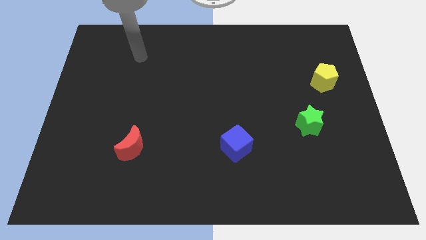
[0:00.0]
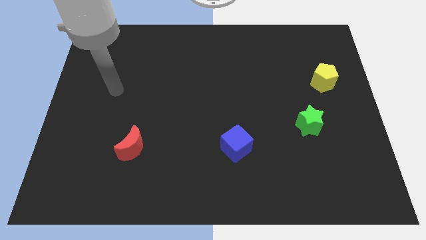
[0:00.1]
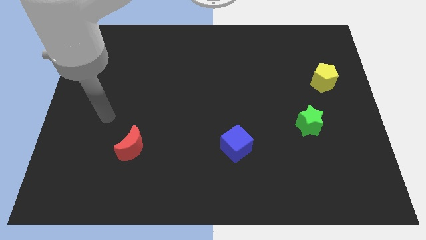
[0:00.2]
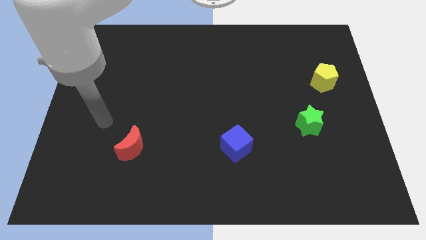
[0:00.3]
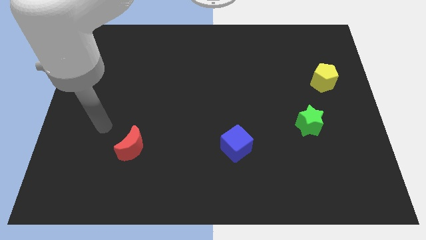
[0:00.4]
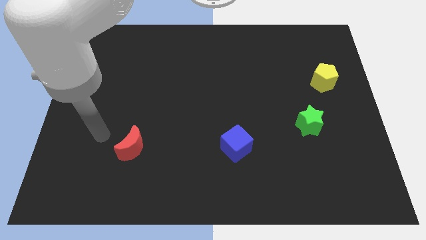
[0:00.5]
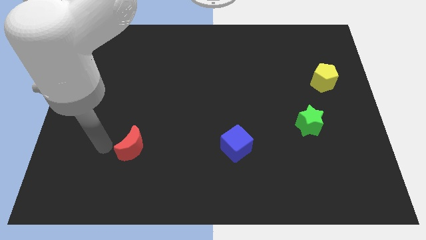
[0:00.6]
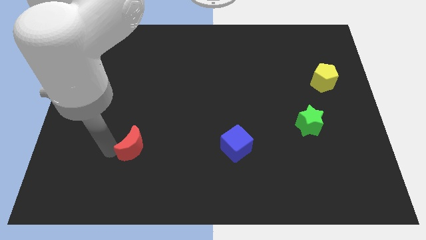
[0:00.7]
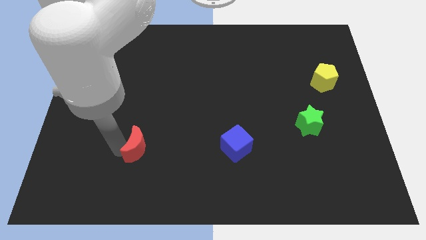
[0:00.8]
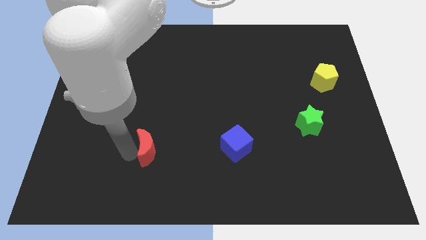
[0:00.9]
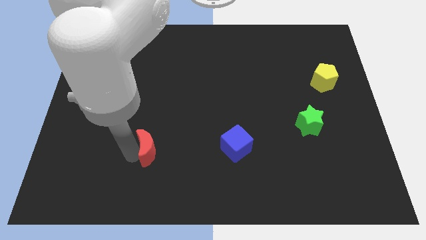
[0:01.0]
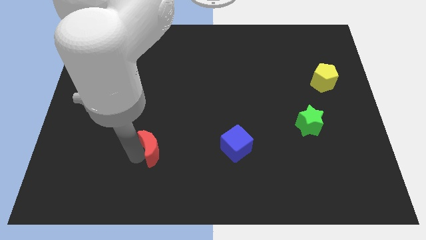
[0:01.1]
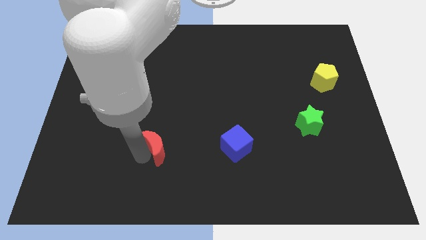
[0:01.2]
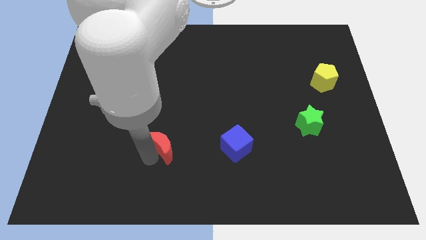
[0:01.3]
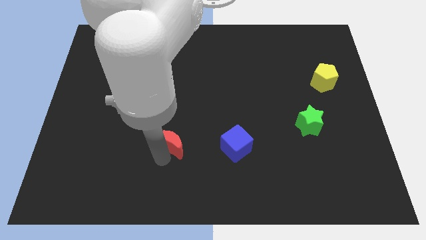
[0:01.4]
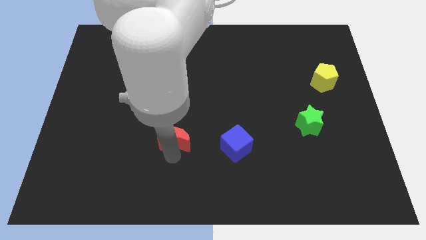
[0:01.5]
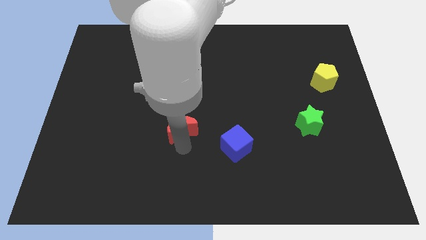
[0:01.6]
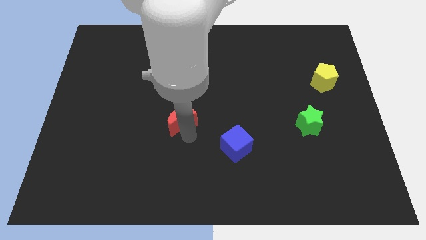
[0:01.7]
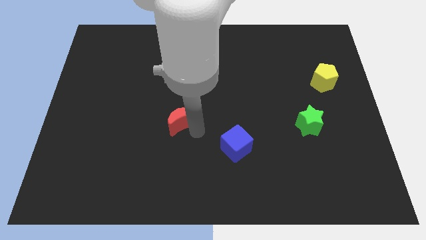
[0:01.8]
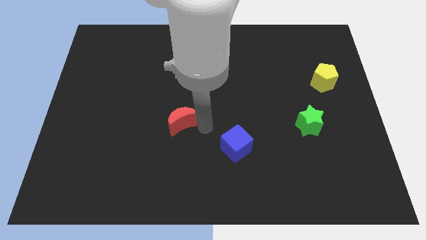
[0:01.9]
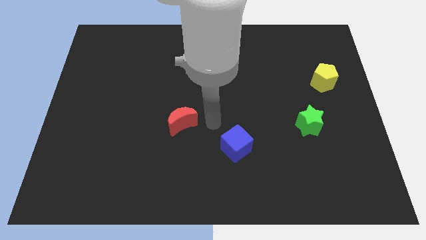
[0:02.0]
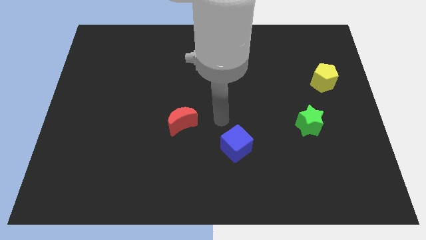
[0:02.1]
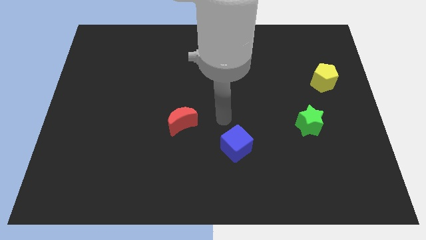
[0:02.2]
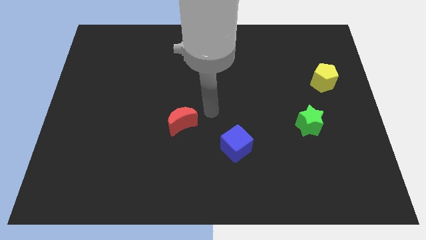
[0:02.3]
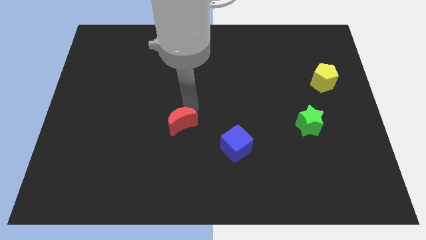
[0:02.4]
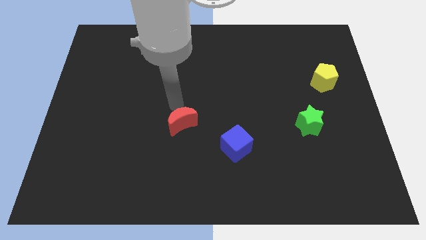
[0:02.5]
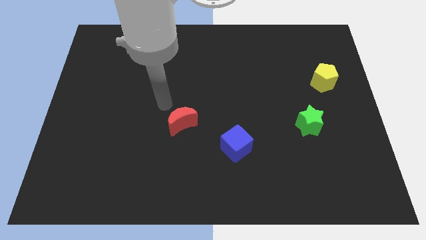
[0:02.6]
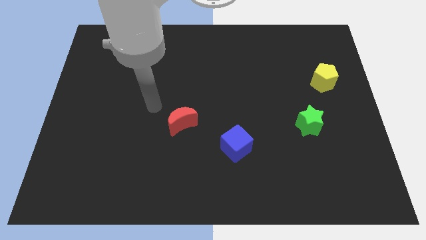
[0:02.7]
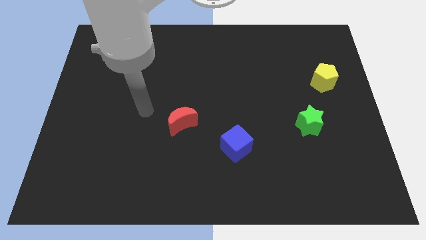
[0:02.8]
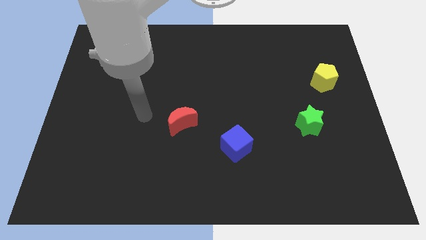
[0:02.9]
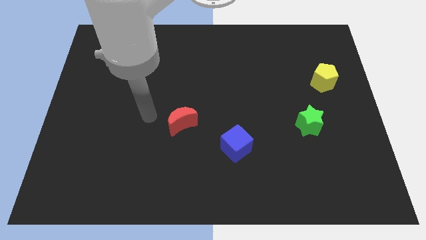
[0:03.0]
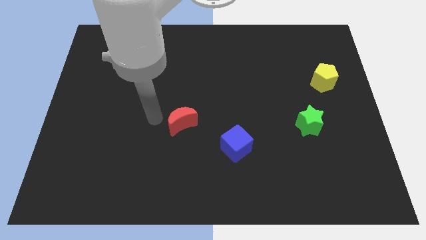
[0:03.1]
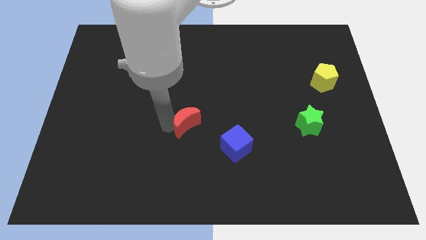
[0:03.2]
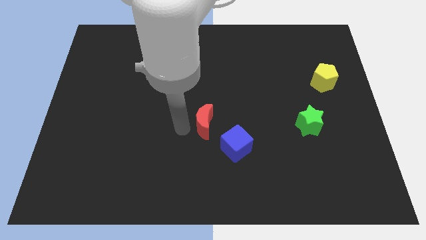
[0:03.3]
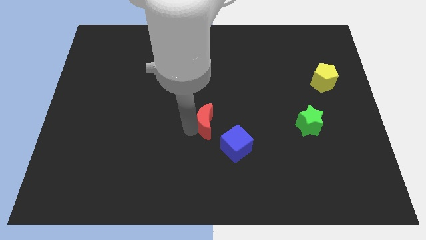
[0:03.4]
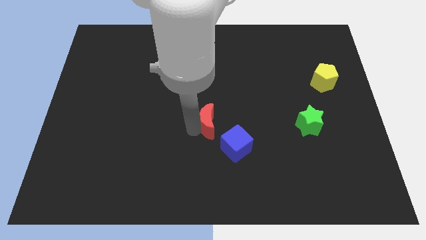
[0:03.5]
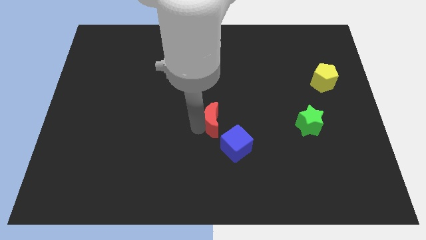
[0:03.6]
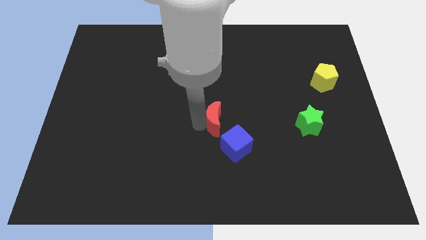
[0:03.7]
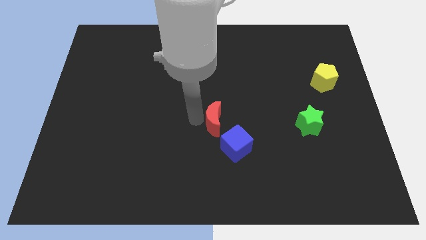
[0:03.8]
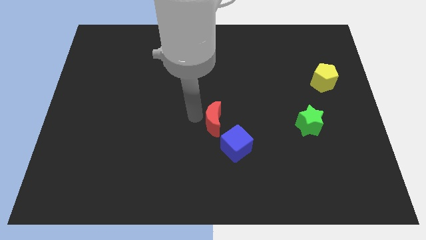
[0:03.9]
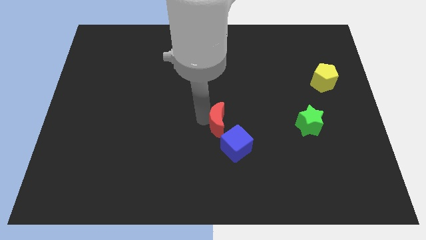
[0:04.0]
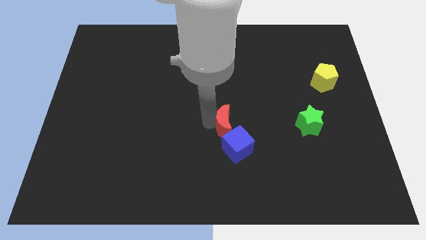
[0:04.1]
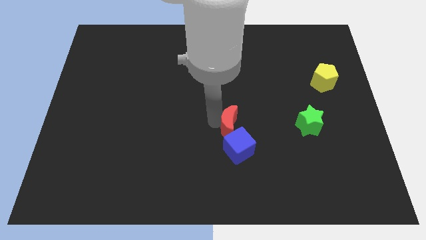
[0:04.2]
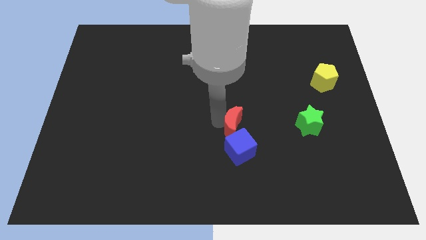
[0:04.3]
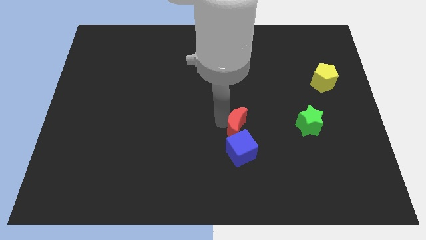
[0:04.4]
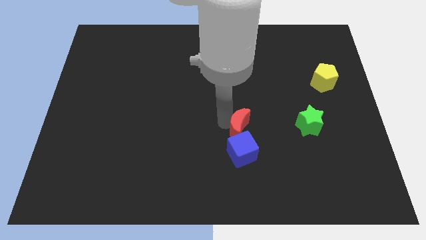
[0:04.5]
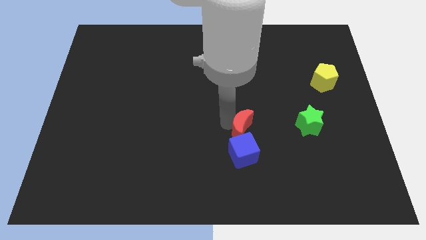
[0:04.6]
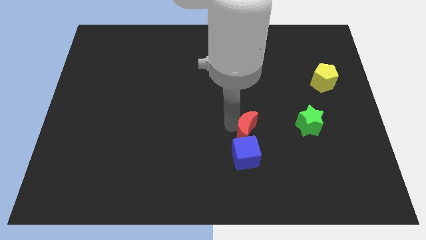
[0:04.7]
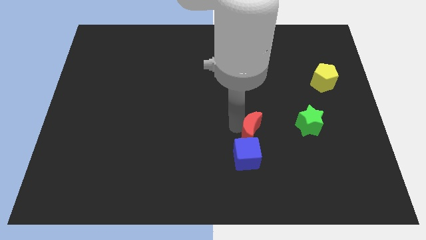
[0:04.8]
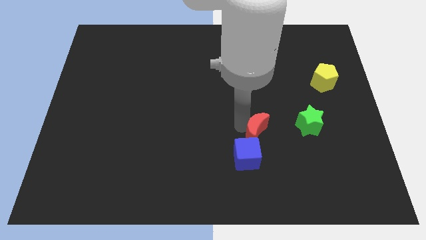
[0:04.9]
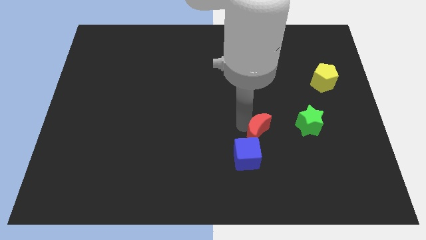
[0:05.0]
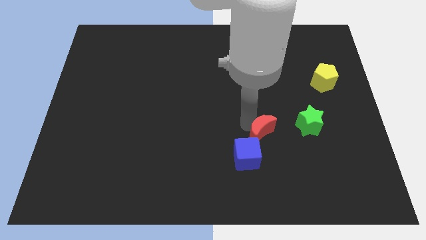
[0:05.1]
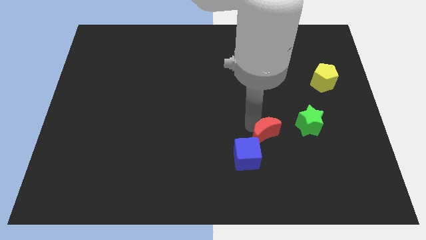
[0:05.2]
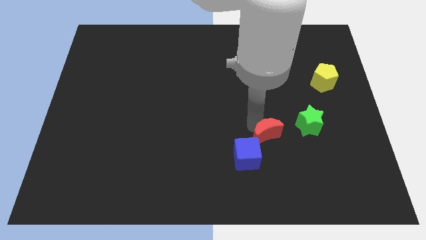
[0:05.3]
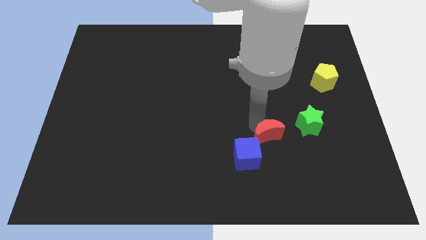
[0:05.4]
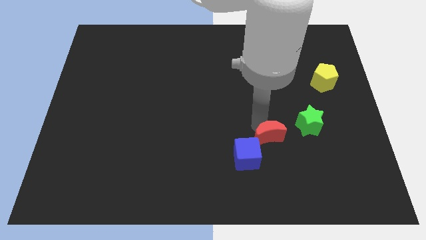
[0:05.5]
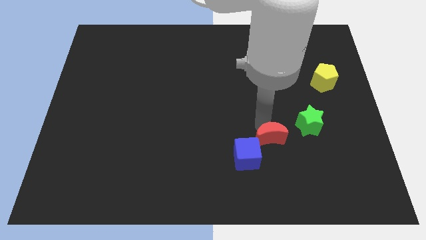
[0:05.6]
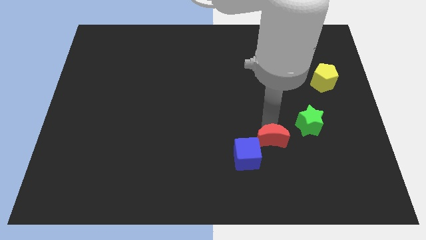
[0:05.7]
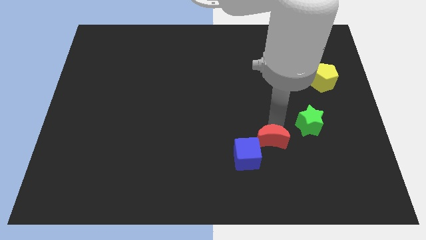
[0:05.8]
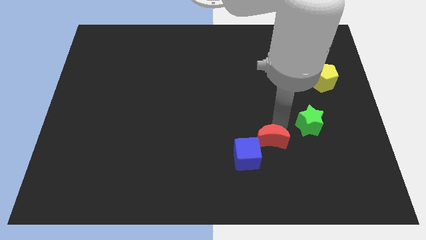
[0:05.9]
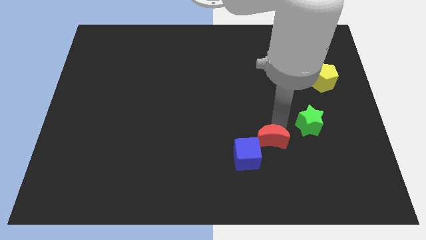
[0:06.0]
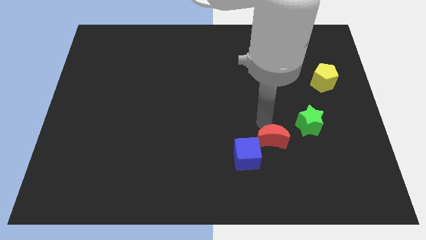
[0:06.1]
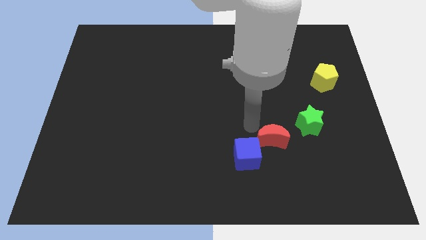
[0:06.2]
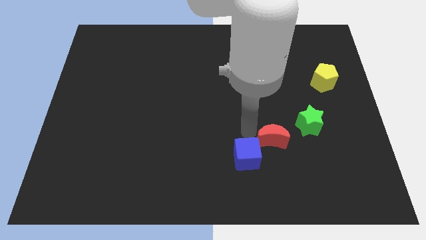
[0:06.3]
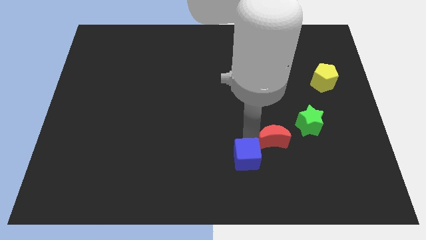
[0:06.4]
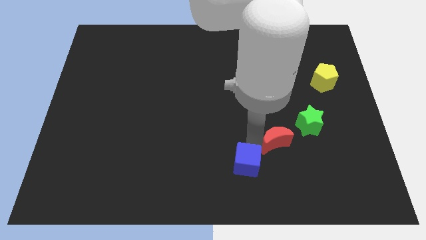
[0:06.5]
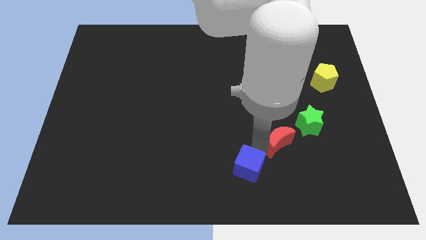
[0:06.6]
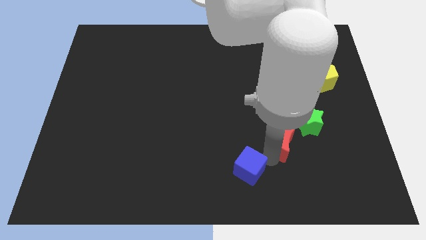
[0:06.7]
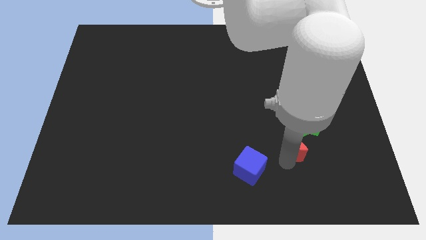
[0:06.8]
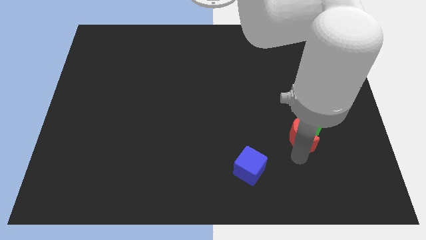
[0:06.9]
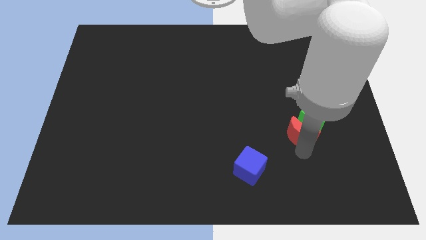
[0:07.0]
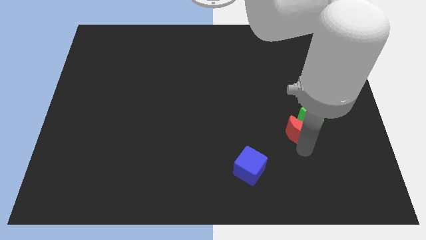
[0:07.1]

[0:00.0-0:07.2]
push the red block close to the green block

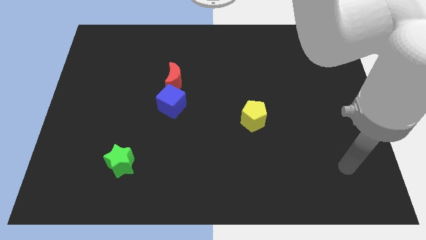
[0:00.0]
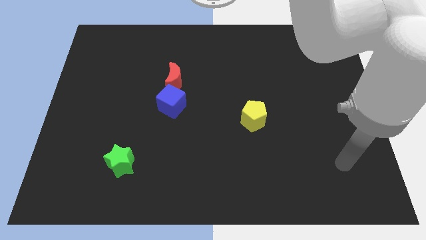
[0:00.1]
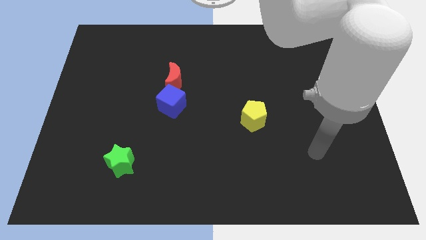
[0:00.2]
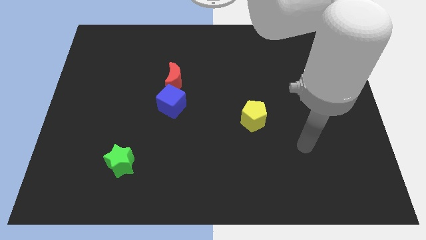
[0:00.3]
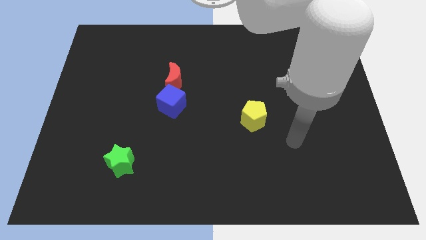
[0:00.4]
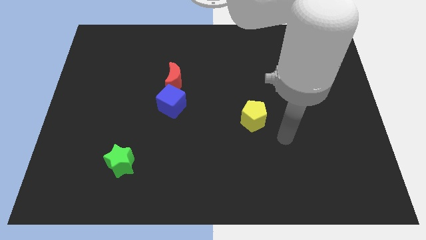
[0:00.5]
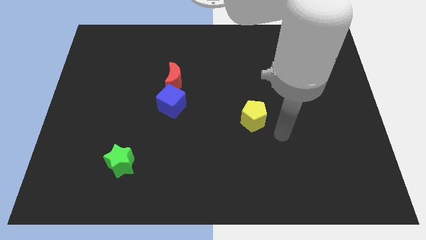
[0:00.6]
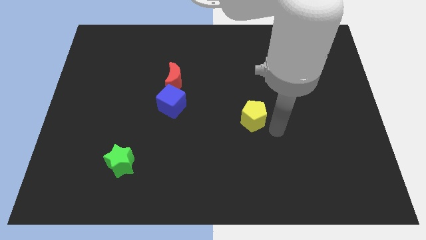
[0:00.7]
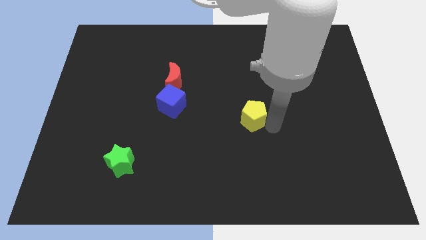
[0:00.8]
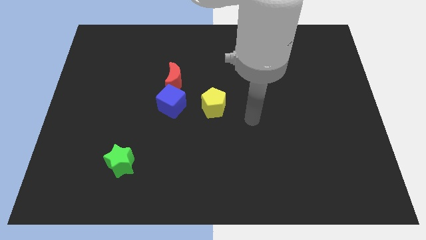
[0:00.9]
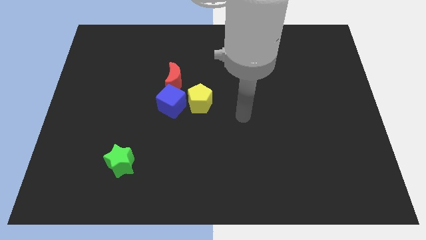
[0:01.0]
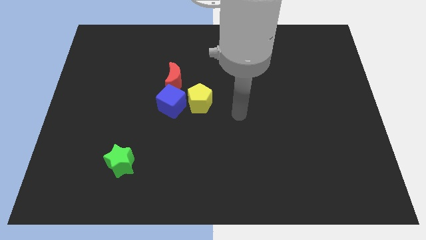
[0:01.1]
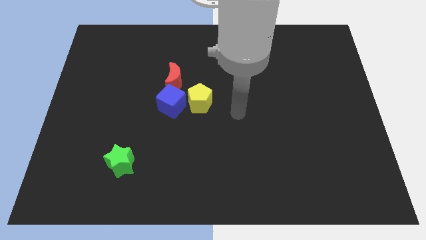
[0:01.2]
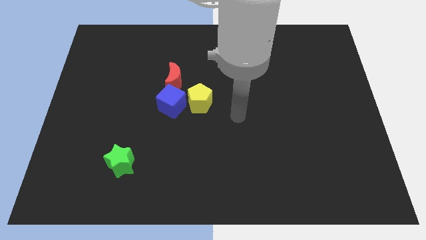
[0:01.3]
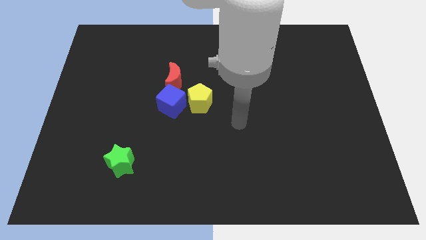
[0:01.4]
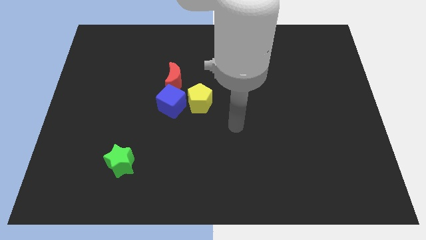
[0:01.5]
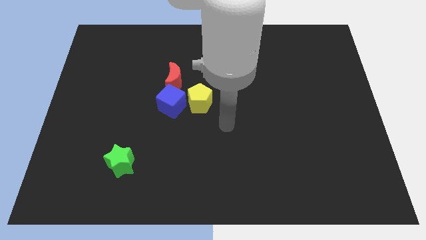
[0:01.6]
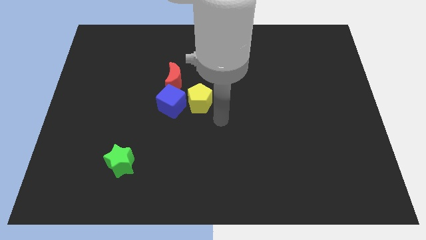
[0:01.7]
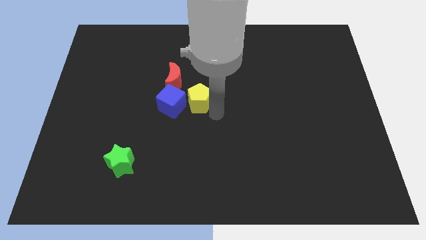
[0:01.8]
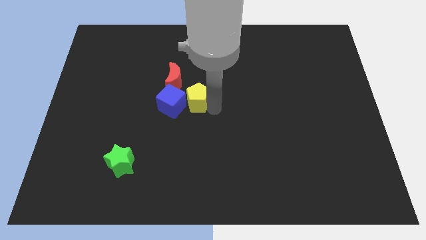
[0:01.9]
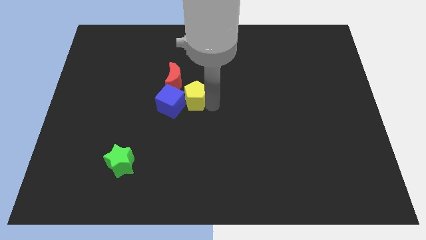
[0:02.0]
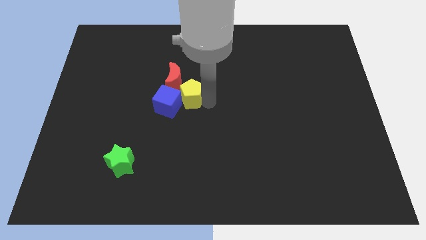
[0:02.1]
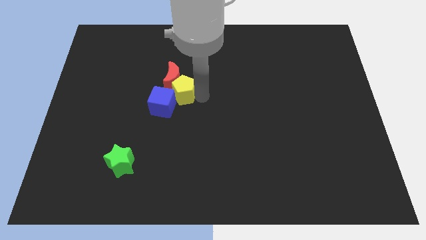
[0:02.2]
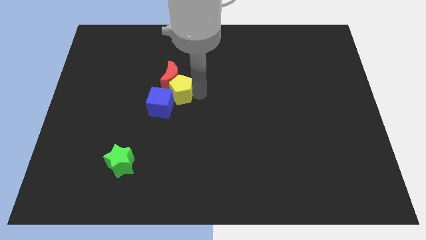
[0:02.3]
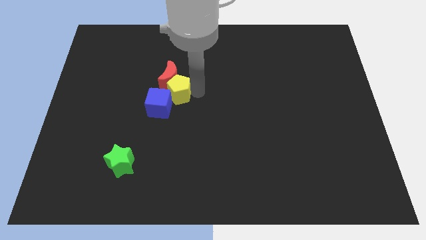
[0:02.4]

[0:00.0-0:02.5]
slide the yellow pentagon next to the moon
